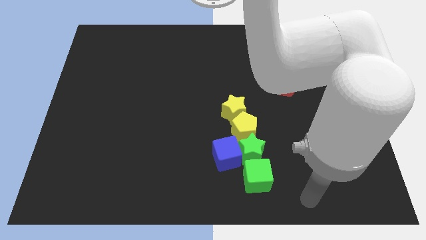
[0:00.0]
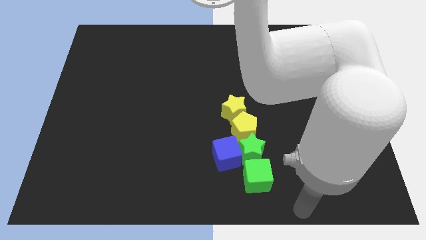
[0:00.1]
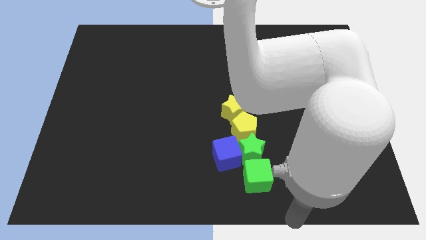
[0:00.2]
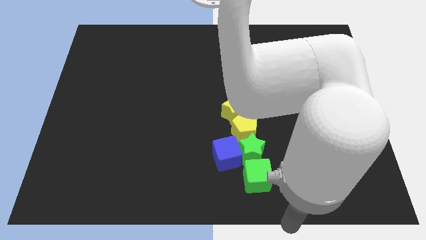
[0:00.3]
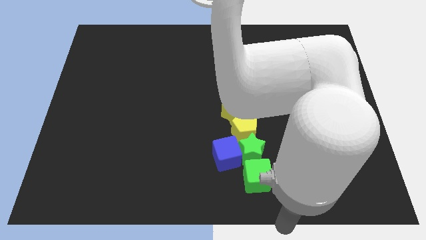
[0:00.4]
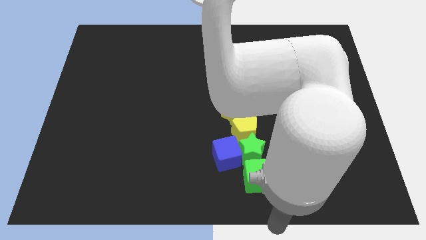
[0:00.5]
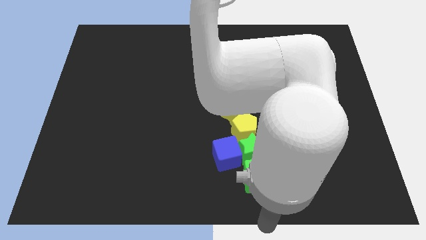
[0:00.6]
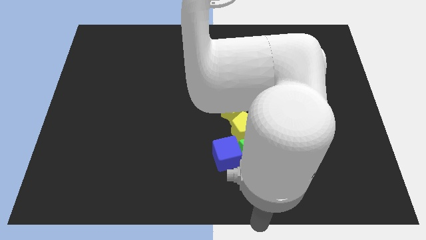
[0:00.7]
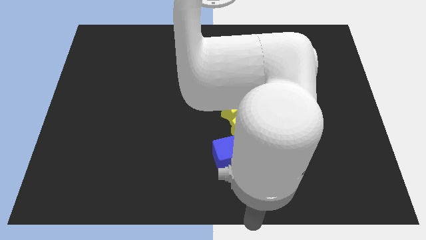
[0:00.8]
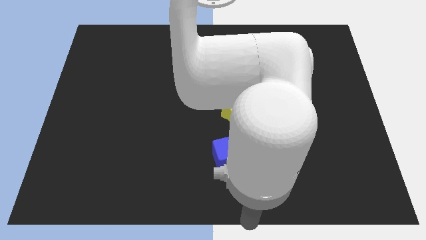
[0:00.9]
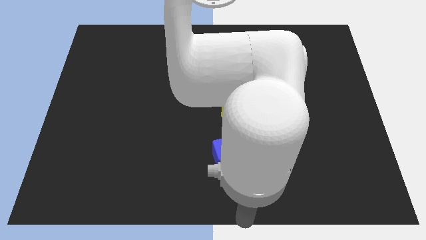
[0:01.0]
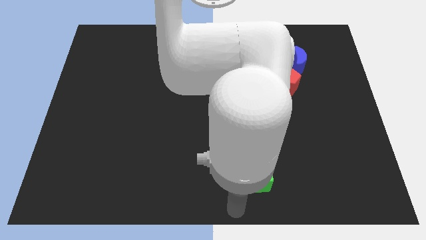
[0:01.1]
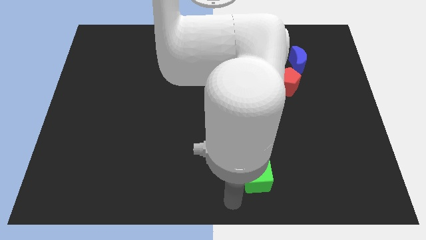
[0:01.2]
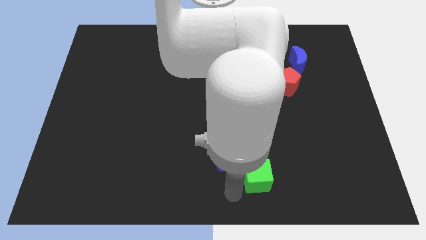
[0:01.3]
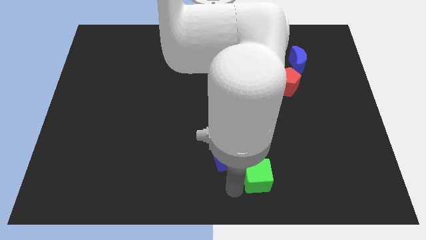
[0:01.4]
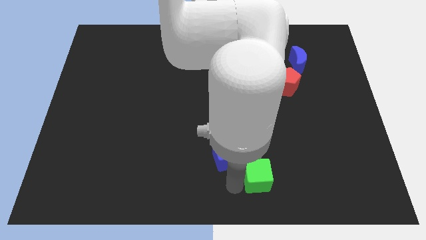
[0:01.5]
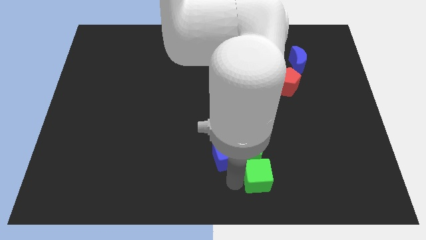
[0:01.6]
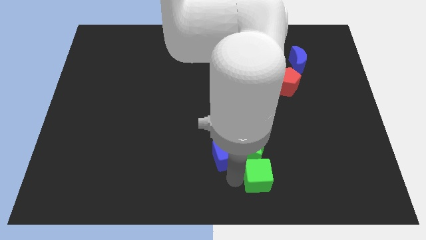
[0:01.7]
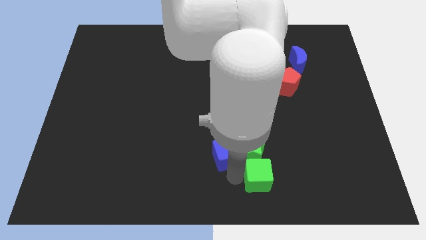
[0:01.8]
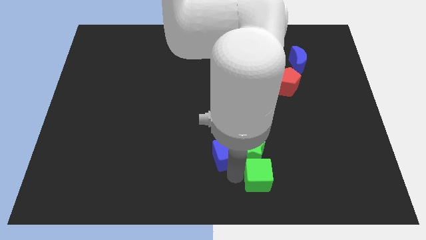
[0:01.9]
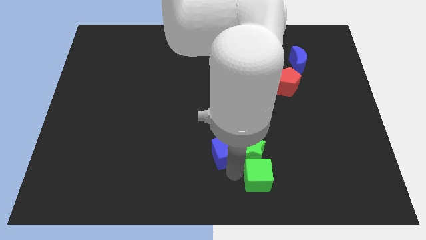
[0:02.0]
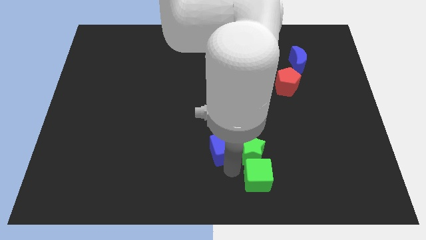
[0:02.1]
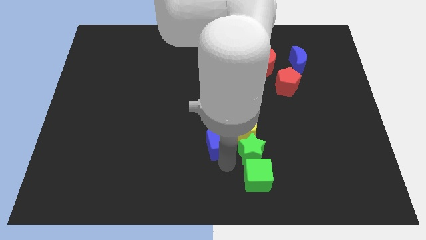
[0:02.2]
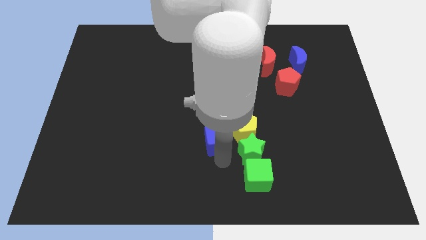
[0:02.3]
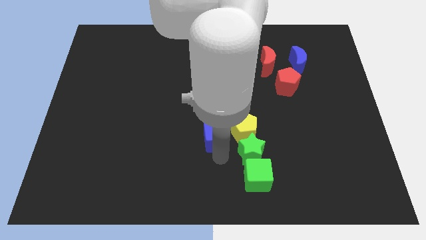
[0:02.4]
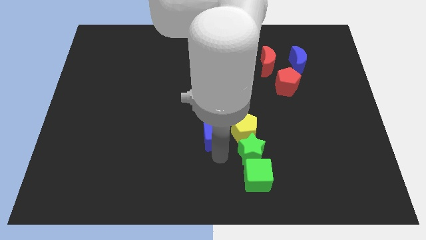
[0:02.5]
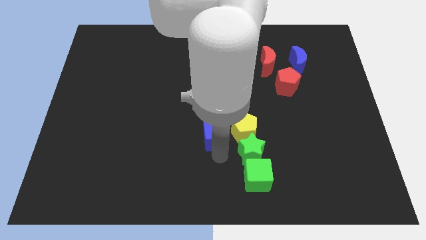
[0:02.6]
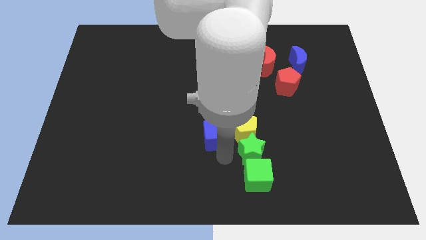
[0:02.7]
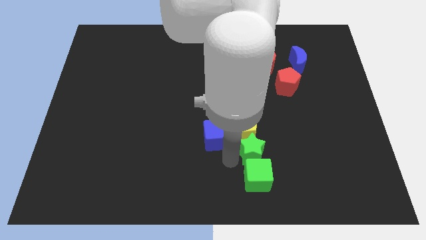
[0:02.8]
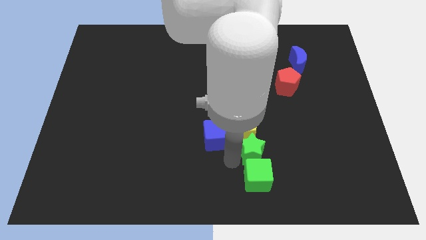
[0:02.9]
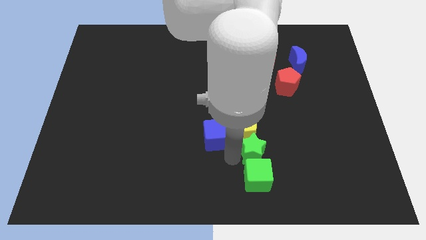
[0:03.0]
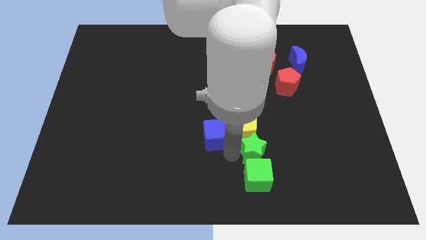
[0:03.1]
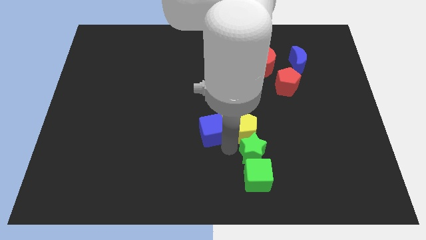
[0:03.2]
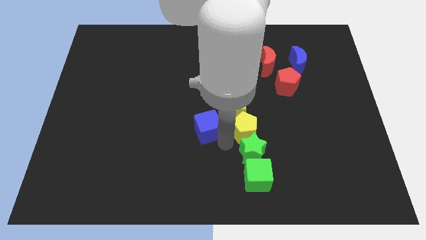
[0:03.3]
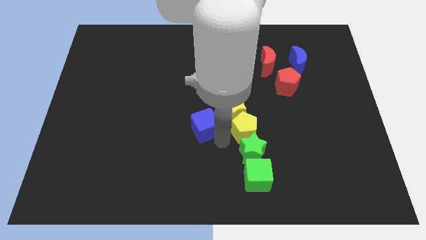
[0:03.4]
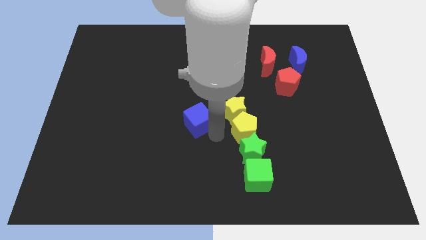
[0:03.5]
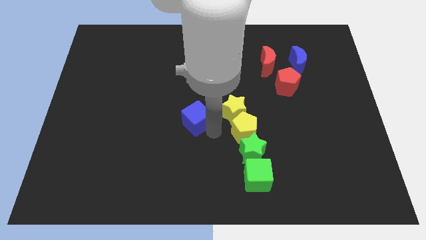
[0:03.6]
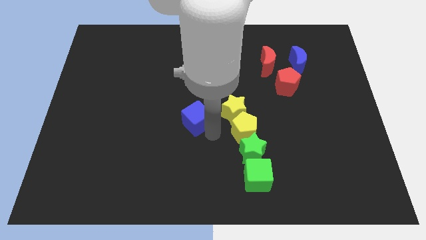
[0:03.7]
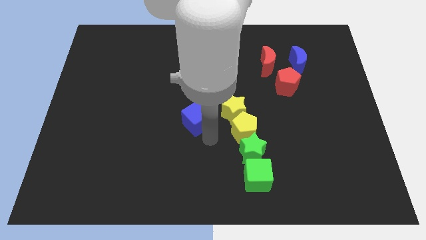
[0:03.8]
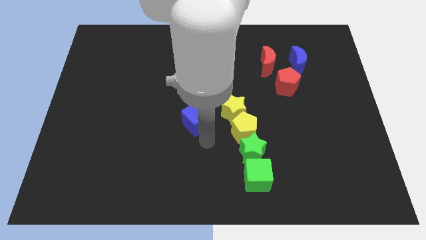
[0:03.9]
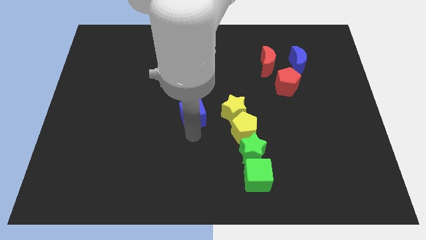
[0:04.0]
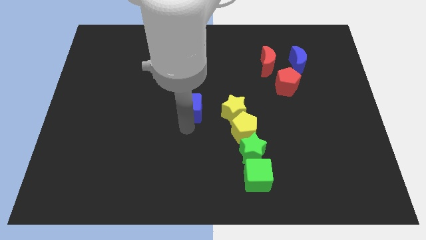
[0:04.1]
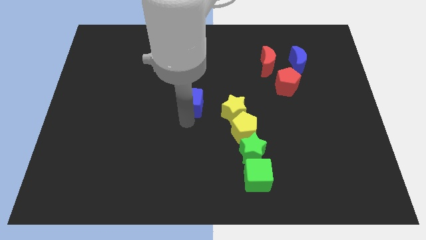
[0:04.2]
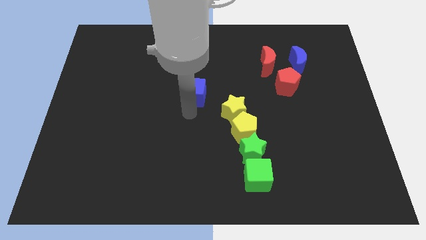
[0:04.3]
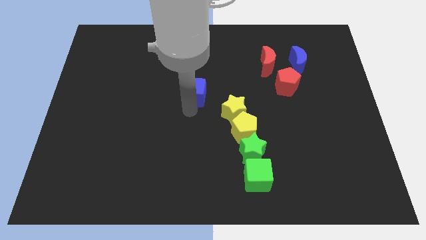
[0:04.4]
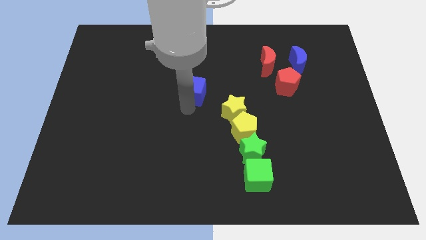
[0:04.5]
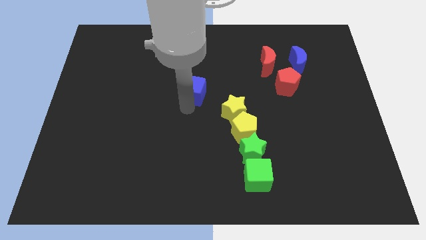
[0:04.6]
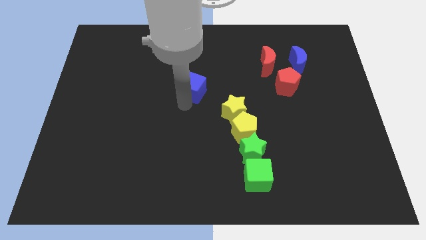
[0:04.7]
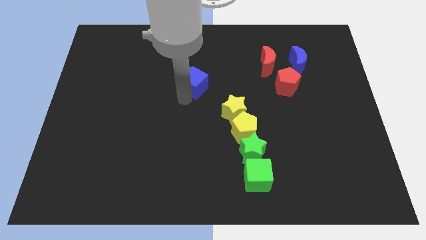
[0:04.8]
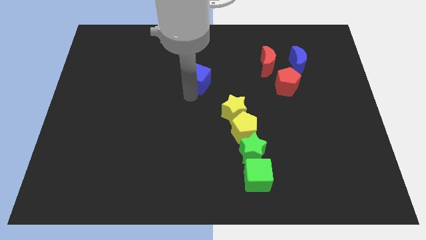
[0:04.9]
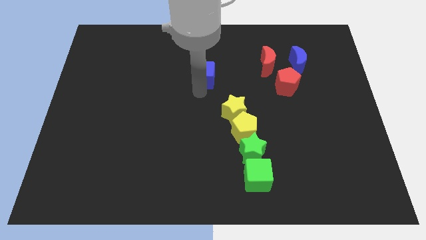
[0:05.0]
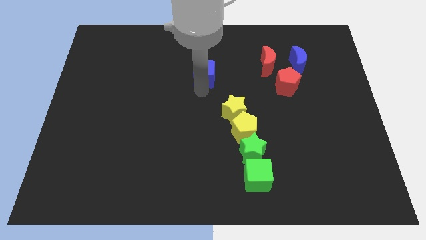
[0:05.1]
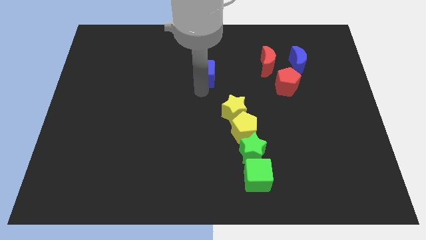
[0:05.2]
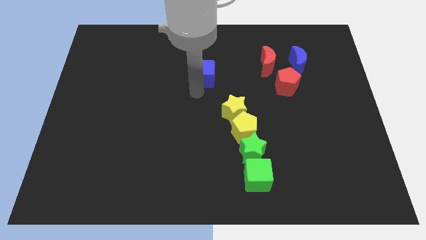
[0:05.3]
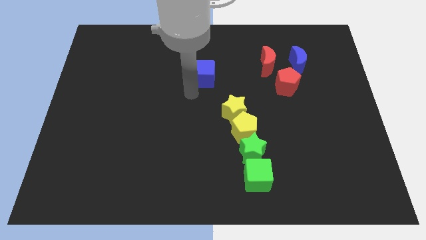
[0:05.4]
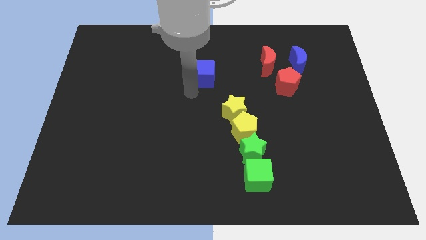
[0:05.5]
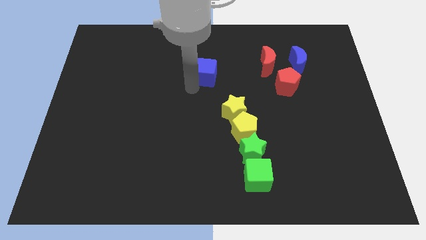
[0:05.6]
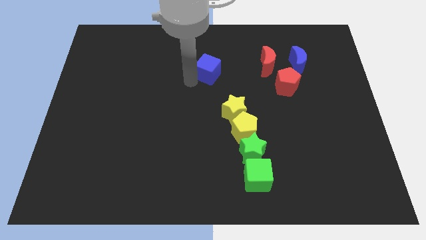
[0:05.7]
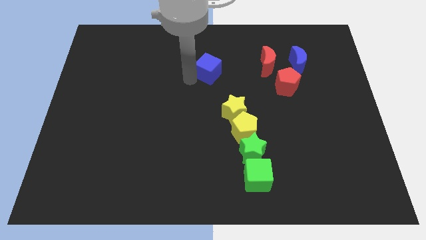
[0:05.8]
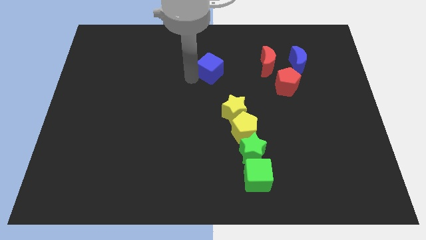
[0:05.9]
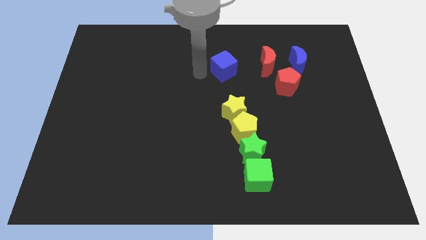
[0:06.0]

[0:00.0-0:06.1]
push the blue cube above the yellow star

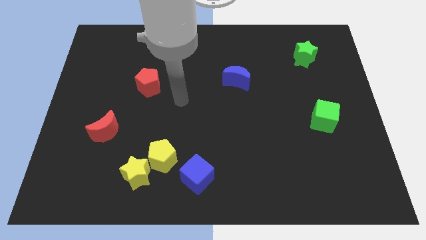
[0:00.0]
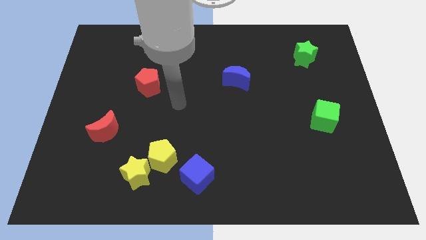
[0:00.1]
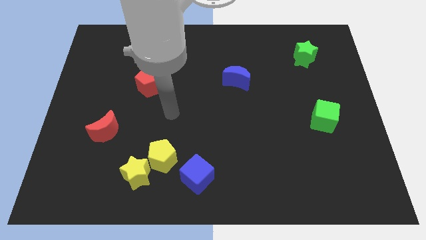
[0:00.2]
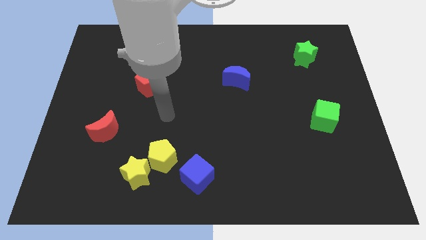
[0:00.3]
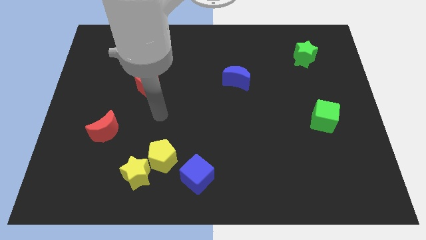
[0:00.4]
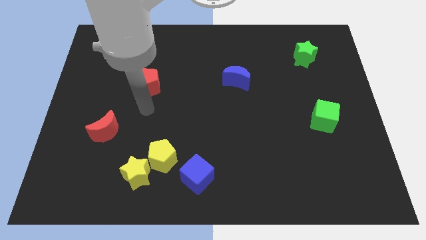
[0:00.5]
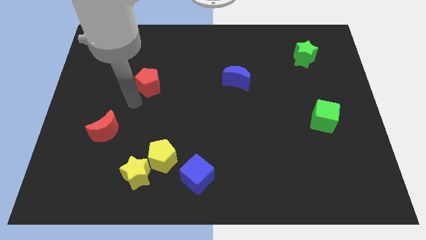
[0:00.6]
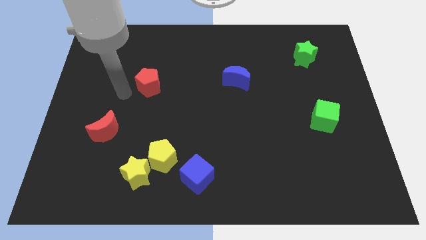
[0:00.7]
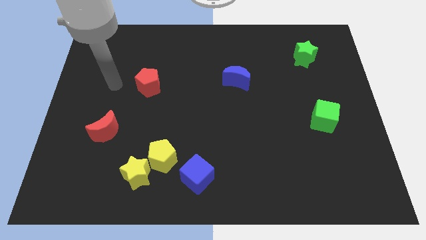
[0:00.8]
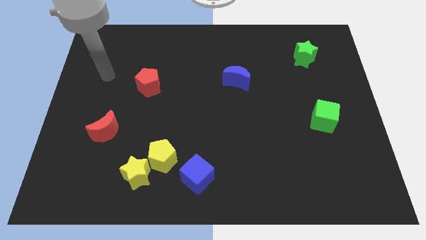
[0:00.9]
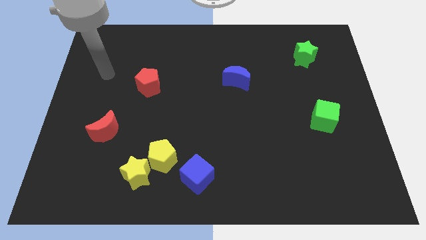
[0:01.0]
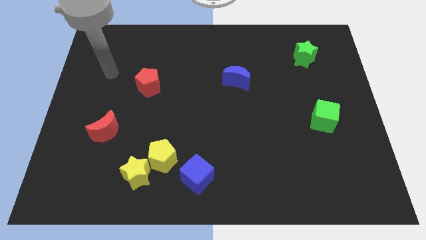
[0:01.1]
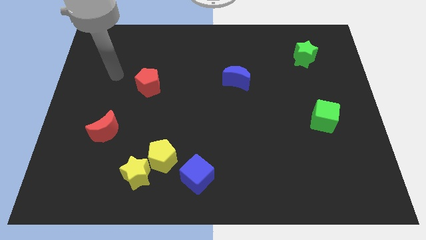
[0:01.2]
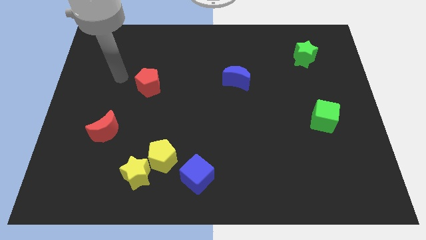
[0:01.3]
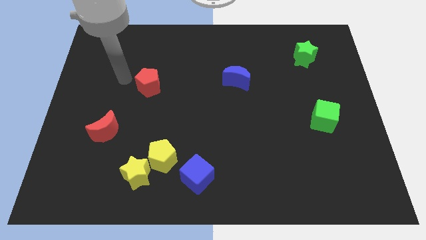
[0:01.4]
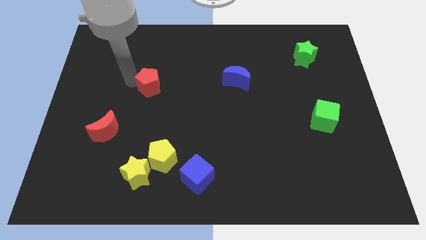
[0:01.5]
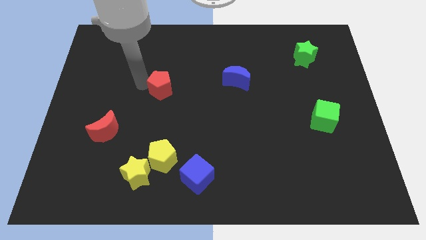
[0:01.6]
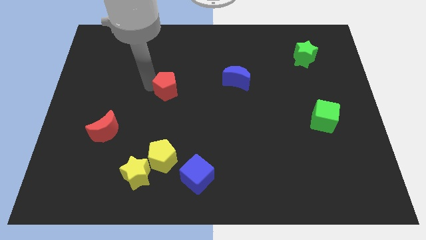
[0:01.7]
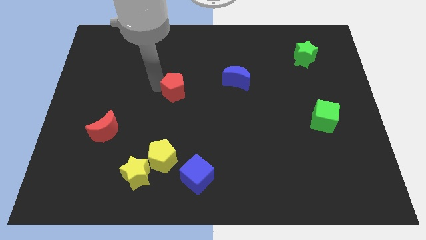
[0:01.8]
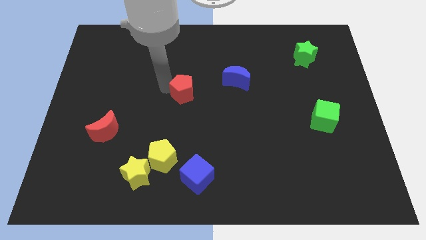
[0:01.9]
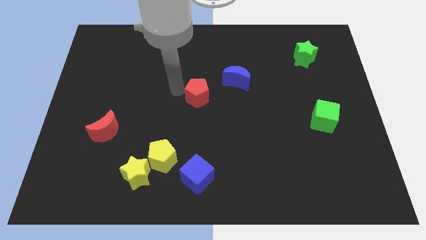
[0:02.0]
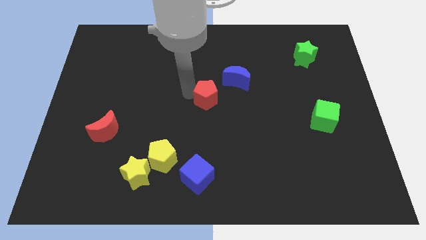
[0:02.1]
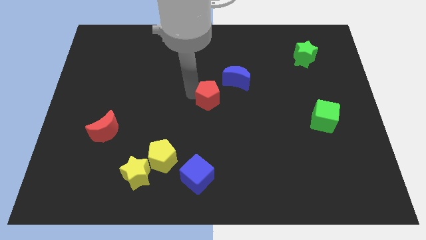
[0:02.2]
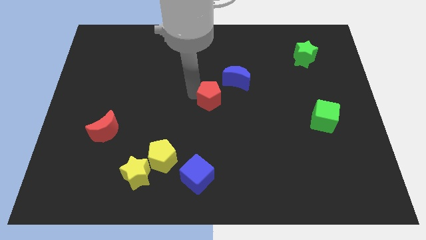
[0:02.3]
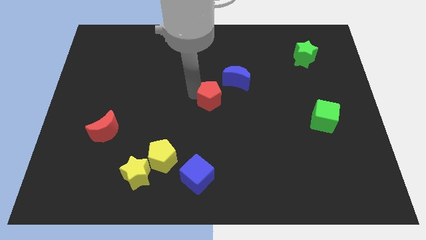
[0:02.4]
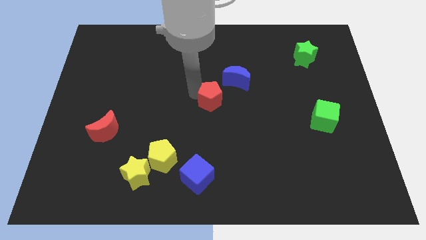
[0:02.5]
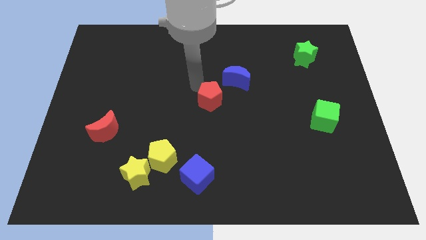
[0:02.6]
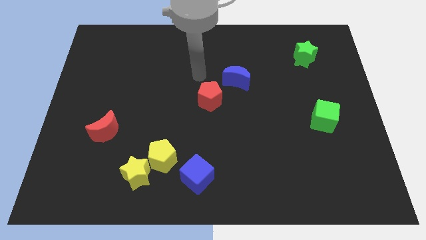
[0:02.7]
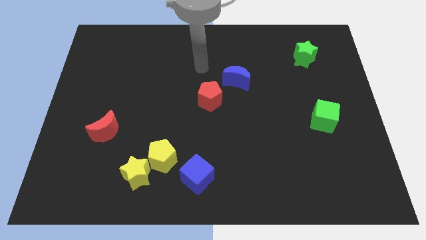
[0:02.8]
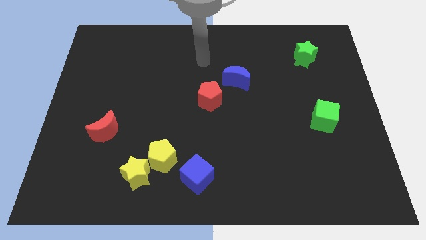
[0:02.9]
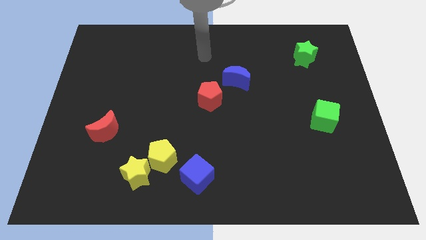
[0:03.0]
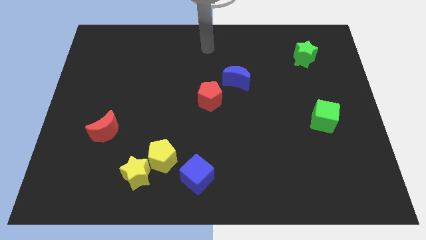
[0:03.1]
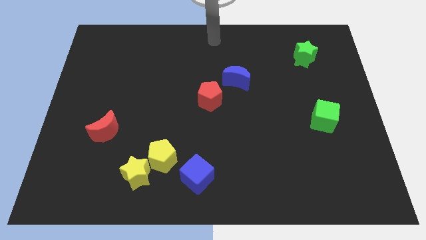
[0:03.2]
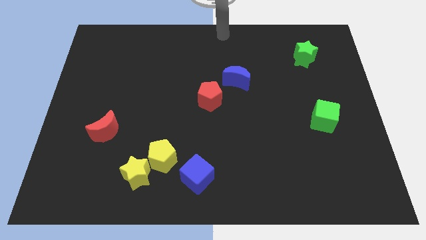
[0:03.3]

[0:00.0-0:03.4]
move the red pentagon to the center
